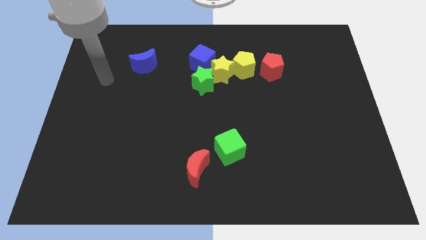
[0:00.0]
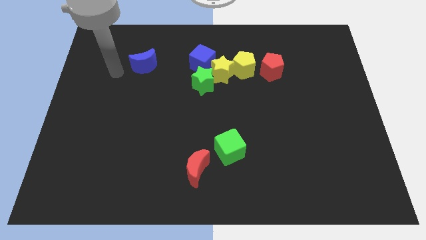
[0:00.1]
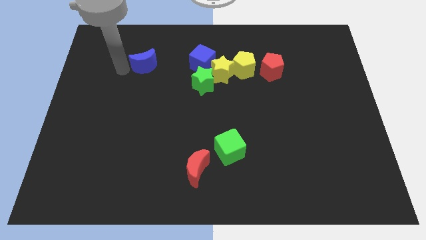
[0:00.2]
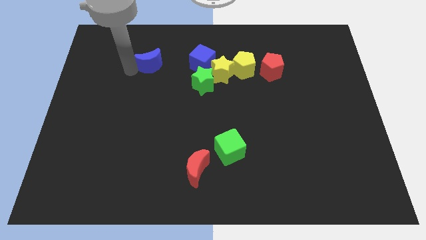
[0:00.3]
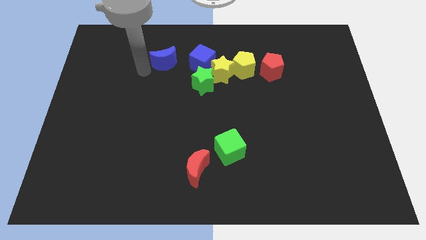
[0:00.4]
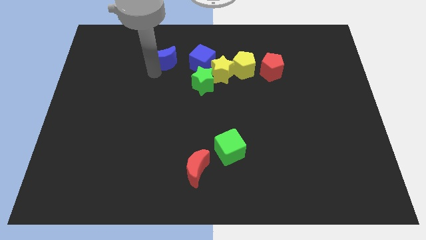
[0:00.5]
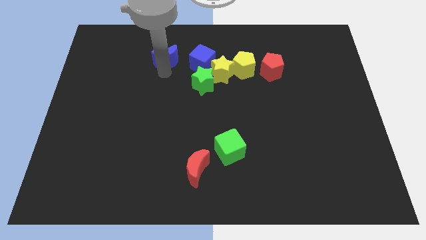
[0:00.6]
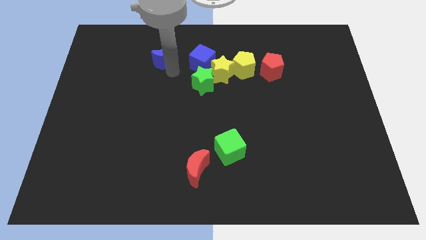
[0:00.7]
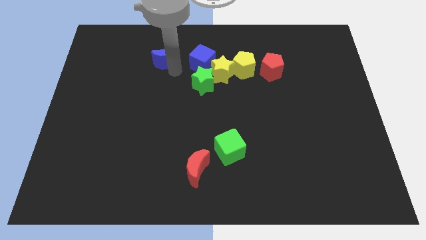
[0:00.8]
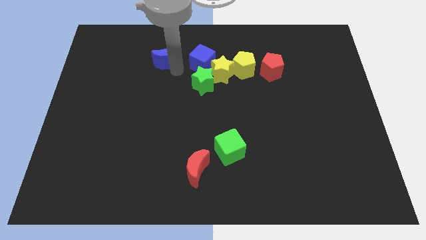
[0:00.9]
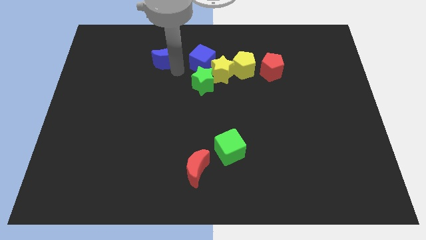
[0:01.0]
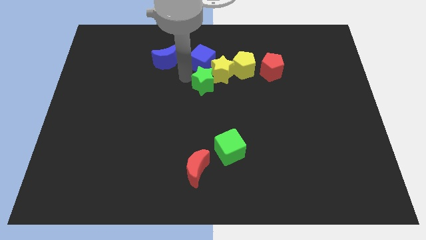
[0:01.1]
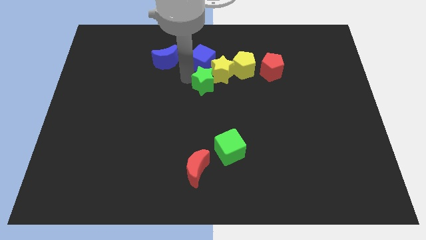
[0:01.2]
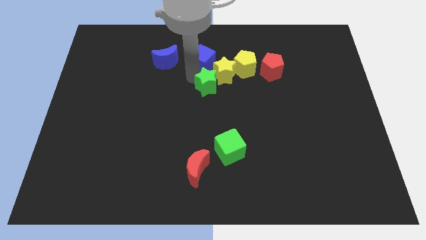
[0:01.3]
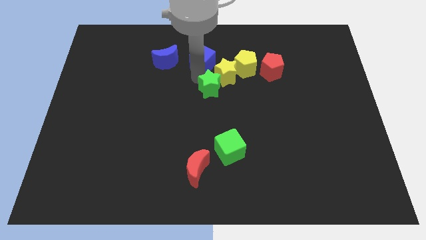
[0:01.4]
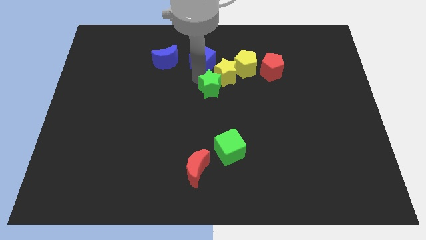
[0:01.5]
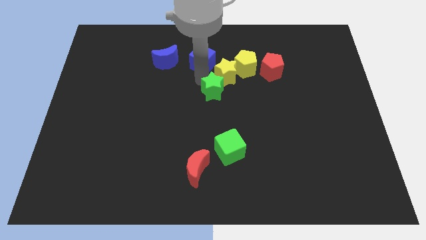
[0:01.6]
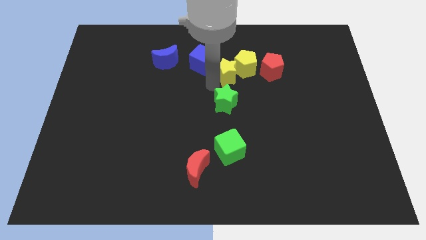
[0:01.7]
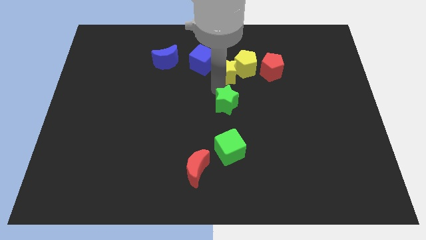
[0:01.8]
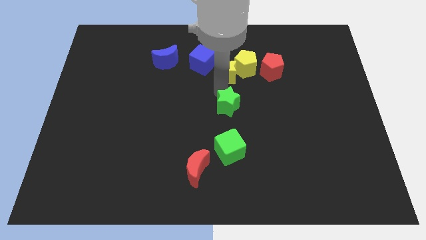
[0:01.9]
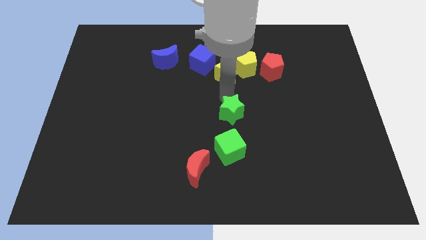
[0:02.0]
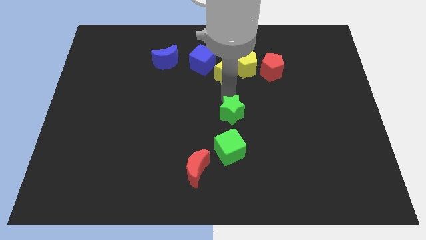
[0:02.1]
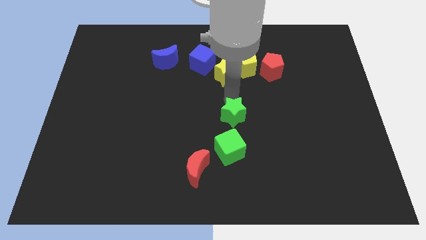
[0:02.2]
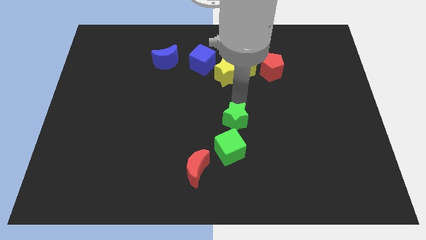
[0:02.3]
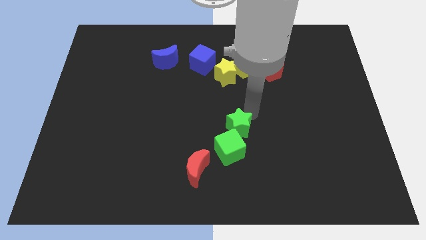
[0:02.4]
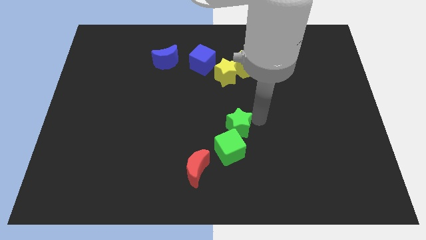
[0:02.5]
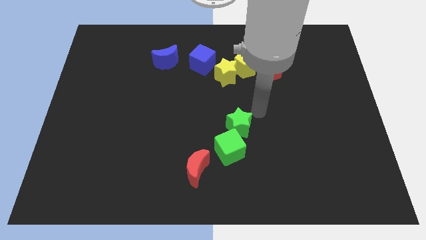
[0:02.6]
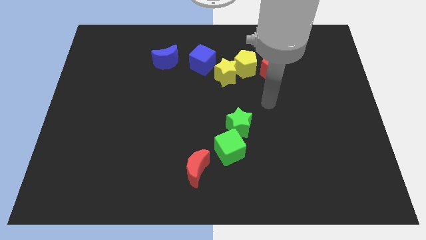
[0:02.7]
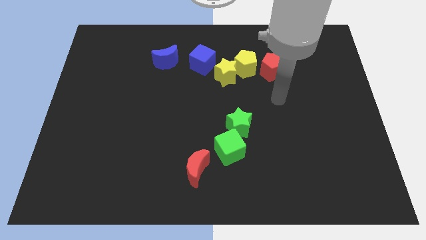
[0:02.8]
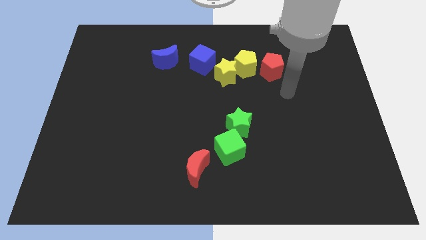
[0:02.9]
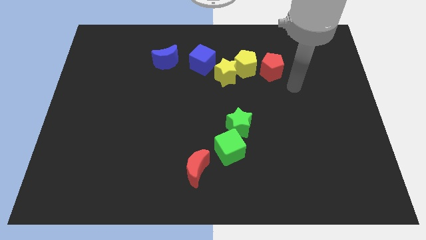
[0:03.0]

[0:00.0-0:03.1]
separate the green star from the group of blocks

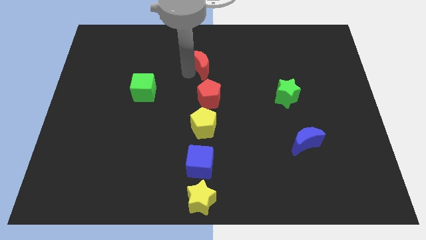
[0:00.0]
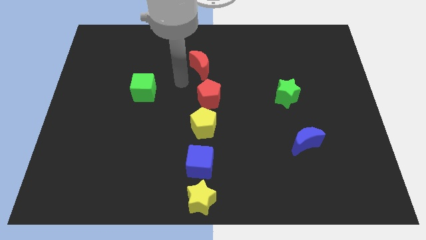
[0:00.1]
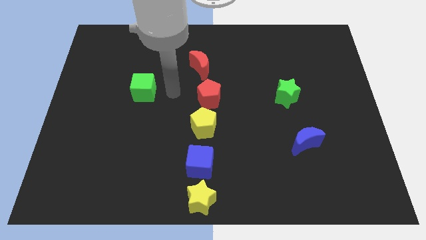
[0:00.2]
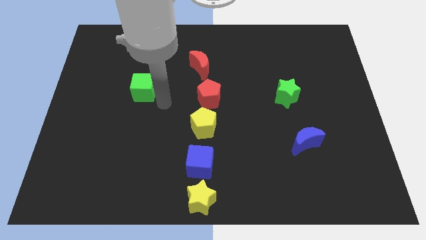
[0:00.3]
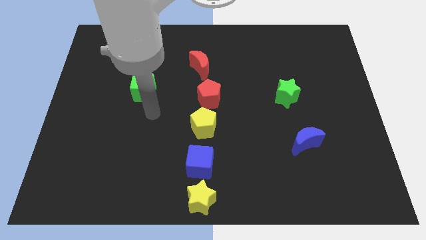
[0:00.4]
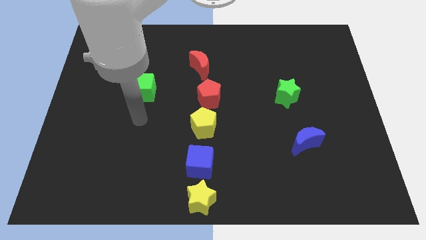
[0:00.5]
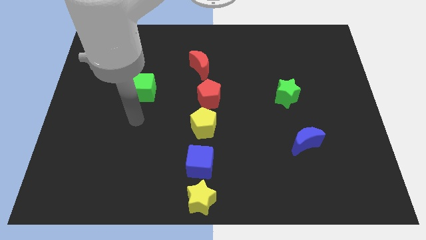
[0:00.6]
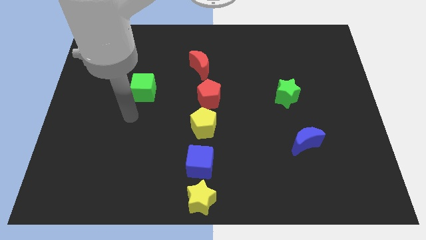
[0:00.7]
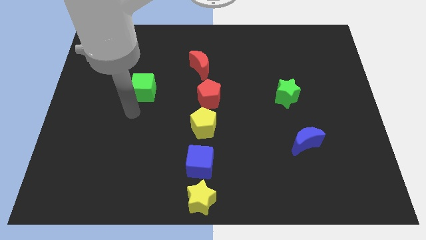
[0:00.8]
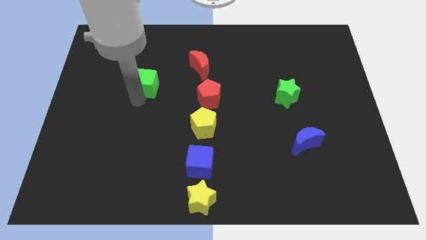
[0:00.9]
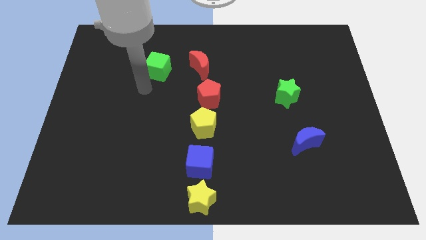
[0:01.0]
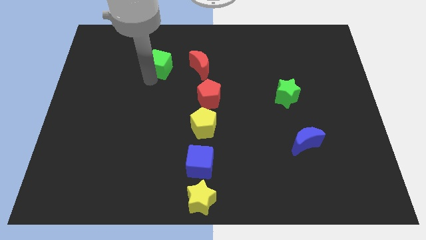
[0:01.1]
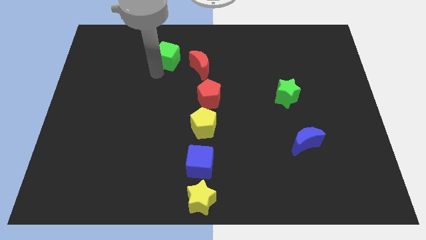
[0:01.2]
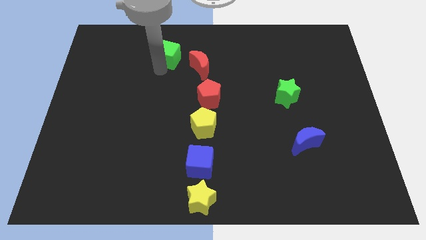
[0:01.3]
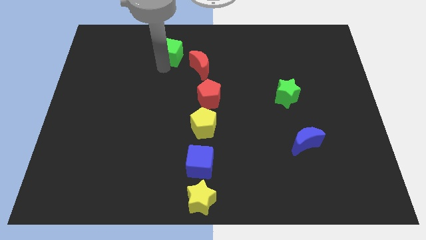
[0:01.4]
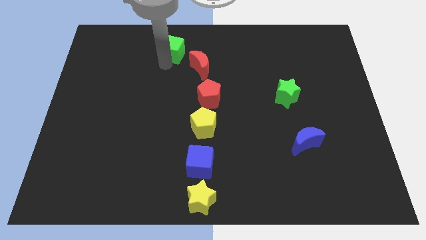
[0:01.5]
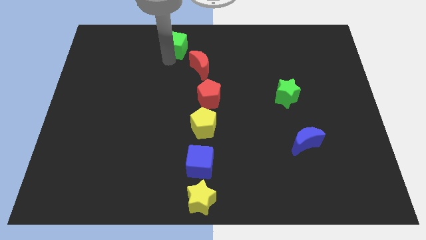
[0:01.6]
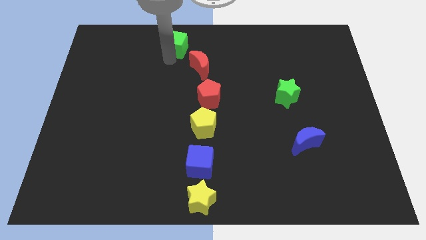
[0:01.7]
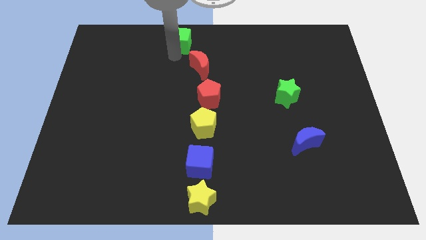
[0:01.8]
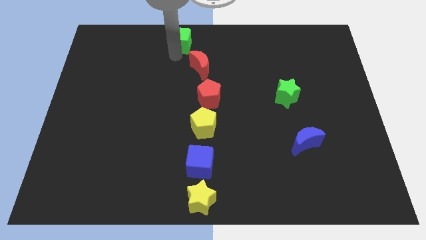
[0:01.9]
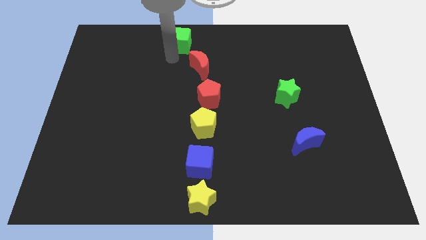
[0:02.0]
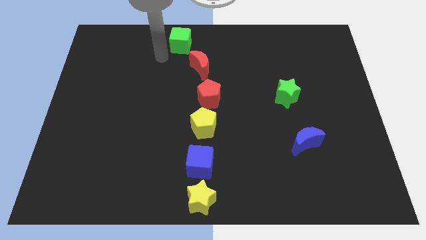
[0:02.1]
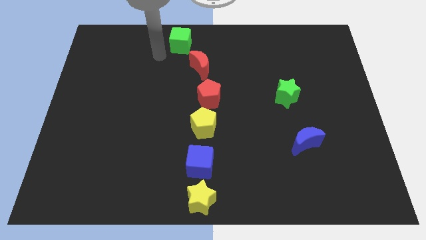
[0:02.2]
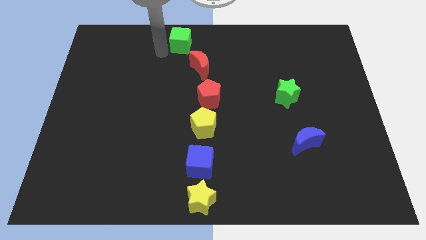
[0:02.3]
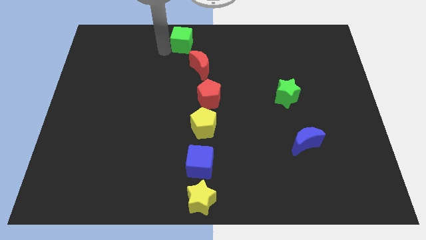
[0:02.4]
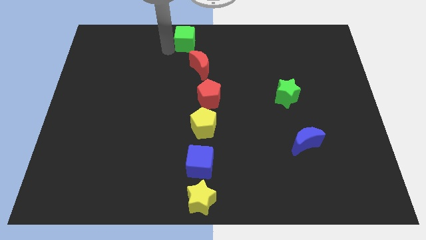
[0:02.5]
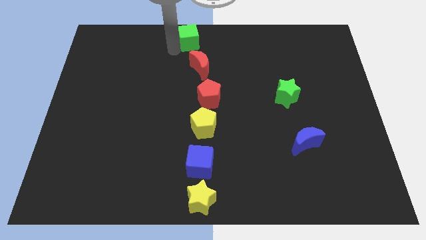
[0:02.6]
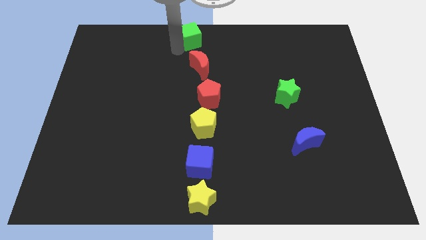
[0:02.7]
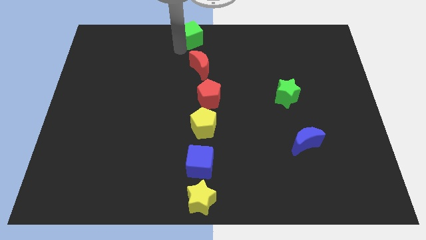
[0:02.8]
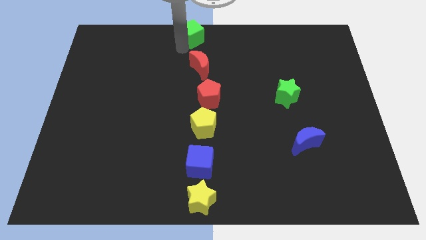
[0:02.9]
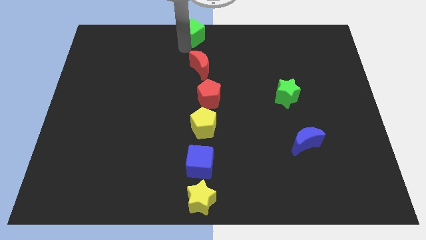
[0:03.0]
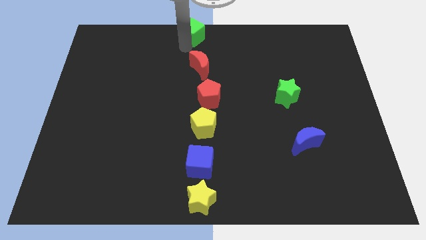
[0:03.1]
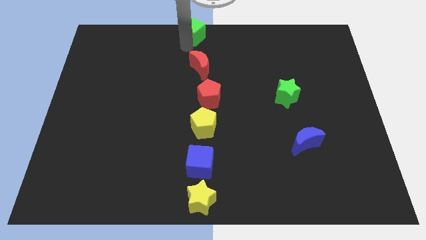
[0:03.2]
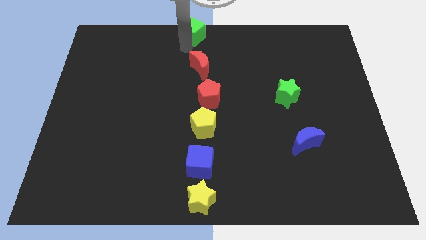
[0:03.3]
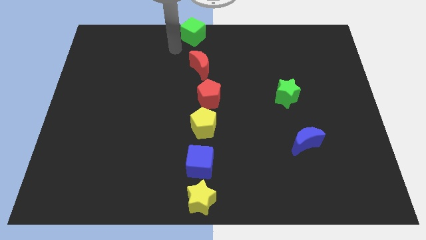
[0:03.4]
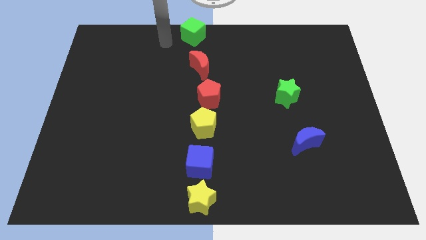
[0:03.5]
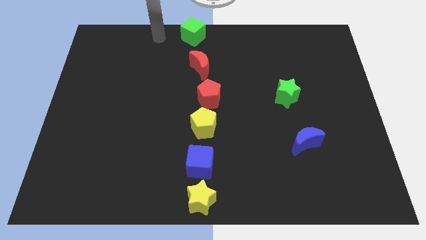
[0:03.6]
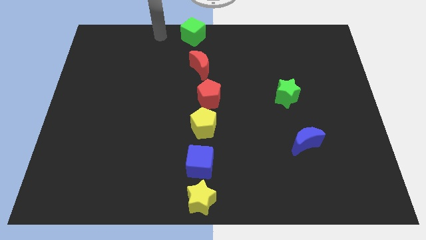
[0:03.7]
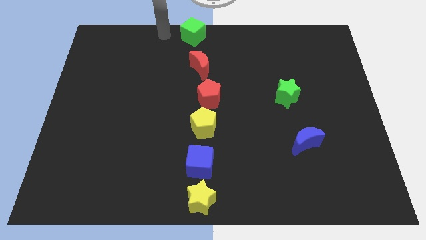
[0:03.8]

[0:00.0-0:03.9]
put the green cube at the top center

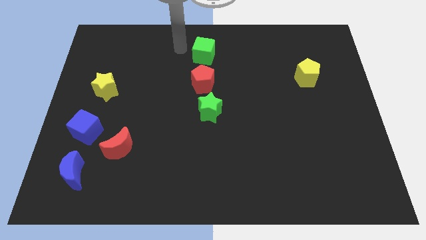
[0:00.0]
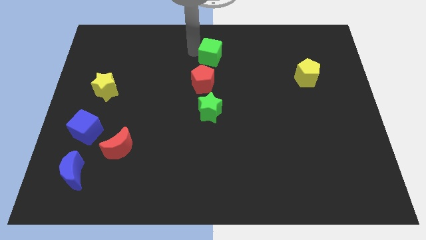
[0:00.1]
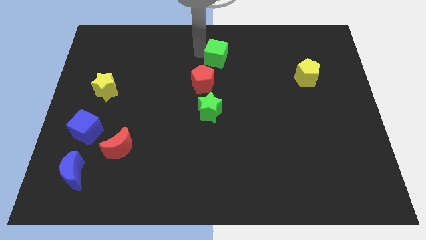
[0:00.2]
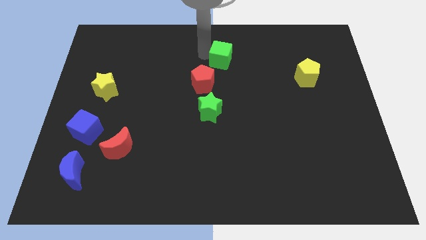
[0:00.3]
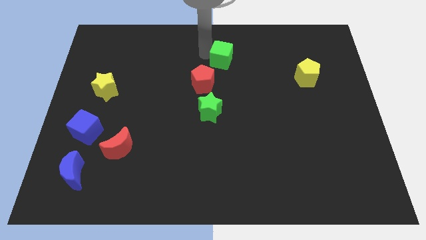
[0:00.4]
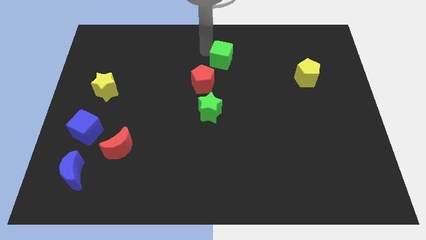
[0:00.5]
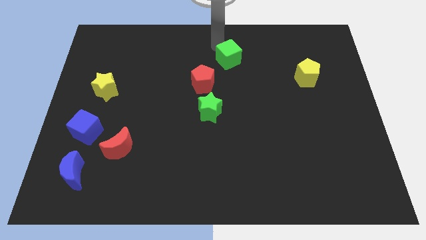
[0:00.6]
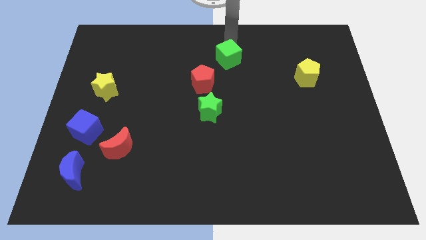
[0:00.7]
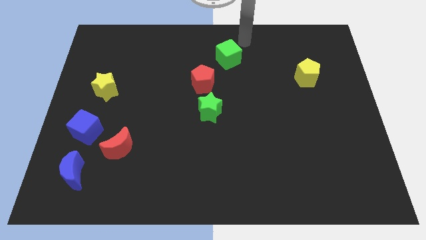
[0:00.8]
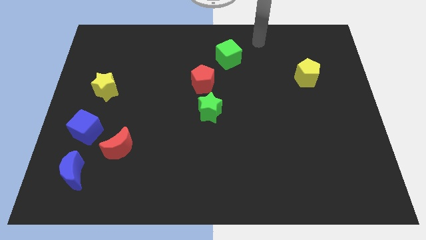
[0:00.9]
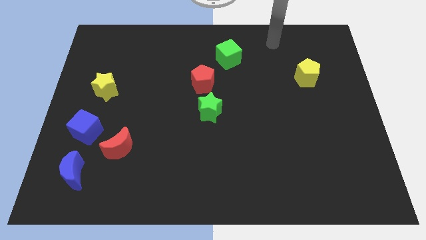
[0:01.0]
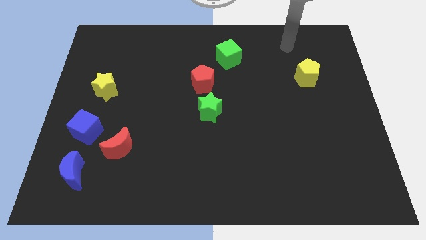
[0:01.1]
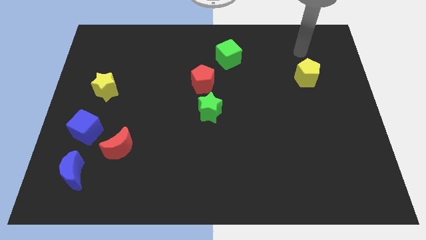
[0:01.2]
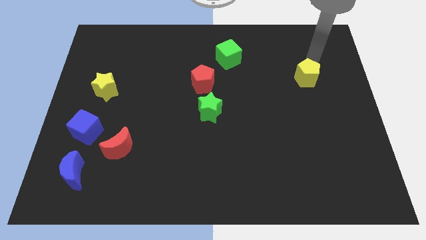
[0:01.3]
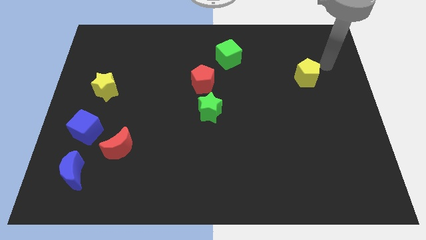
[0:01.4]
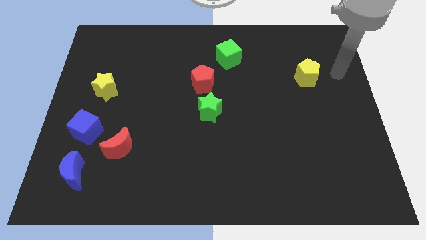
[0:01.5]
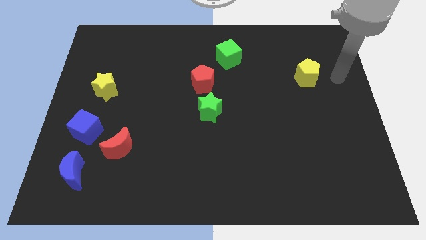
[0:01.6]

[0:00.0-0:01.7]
move your arm towards the right center of the board

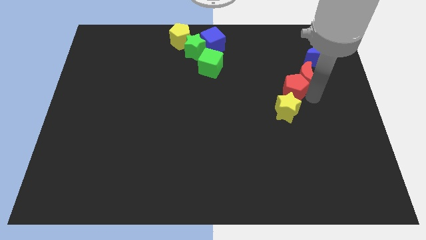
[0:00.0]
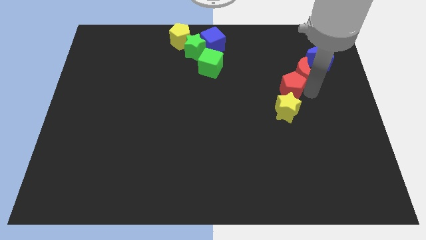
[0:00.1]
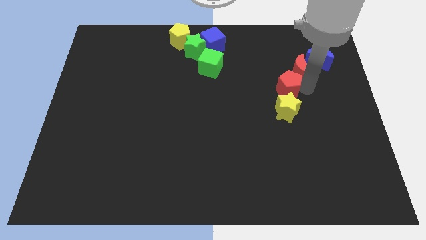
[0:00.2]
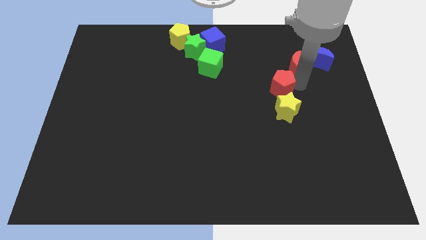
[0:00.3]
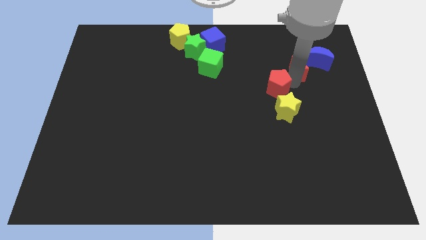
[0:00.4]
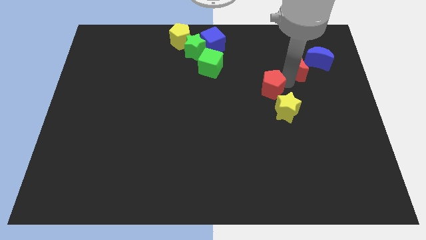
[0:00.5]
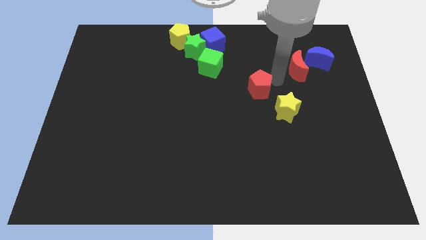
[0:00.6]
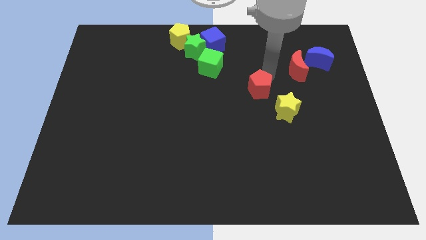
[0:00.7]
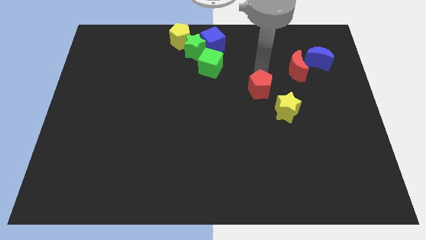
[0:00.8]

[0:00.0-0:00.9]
separate the red pentagon from the group of blocks
